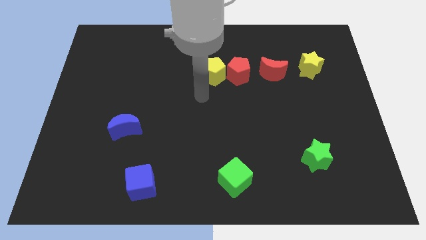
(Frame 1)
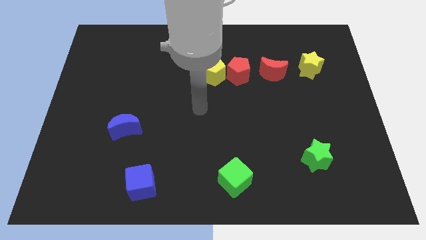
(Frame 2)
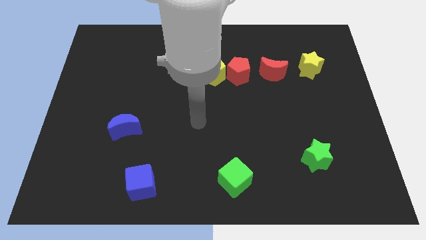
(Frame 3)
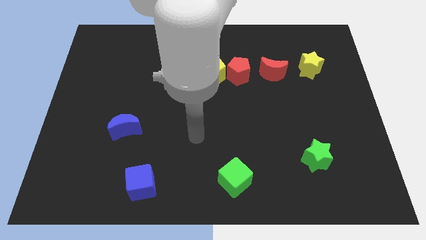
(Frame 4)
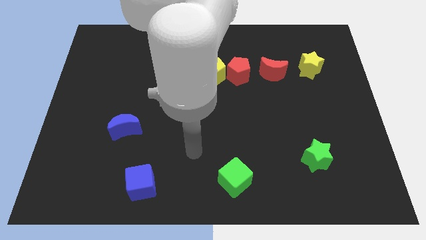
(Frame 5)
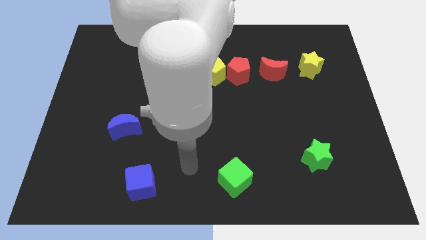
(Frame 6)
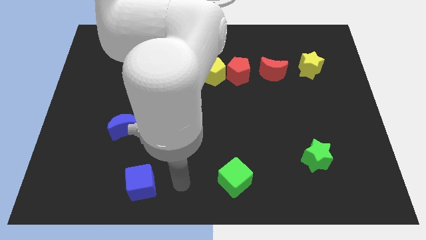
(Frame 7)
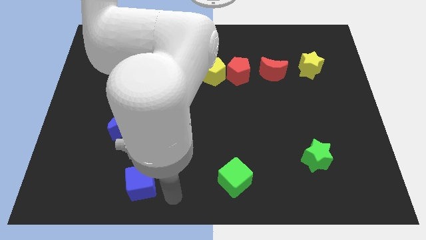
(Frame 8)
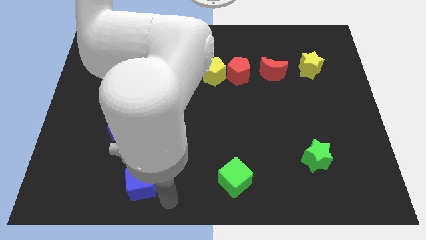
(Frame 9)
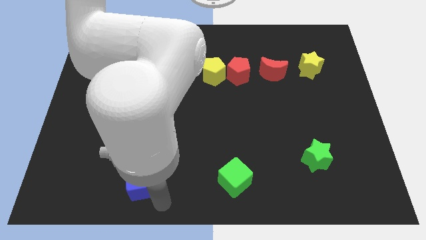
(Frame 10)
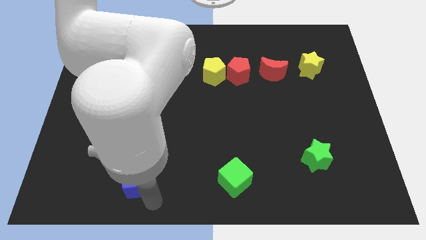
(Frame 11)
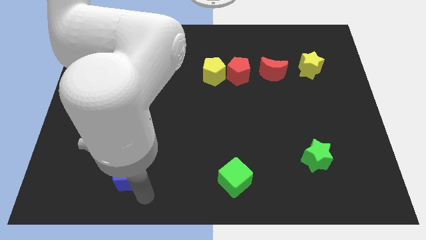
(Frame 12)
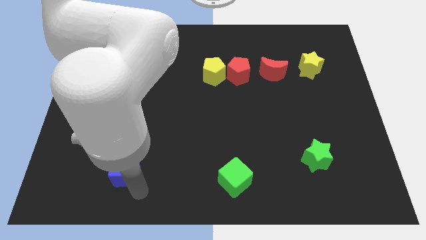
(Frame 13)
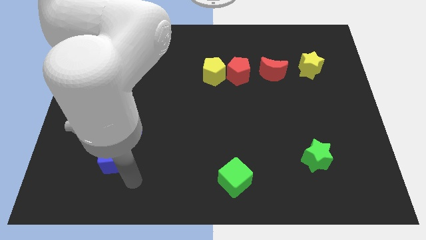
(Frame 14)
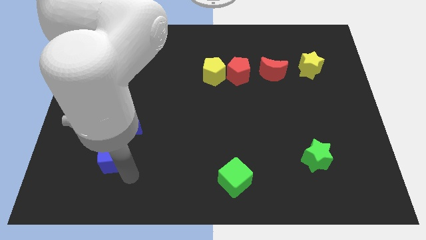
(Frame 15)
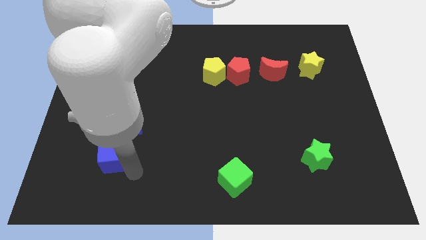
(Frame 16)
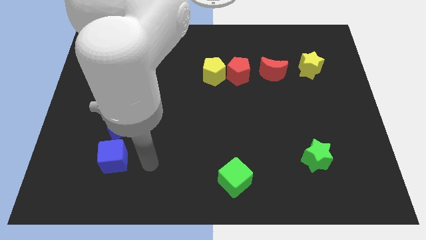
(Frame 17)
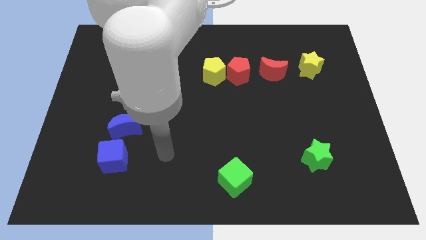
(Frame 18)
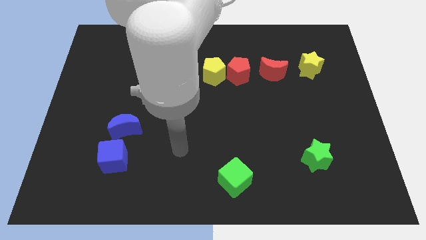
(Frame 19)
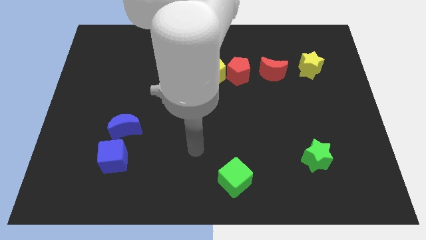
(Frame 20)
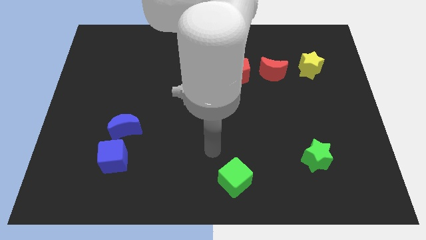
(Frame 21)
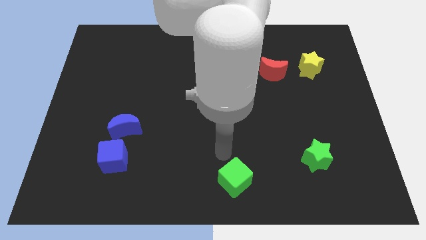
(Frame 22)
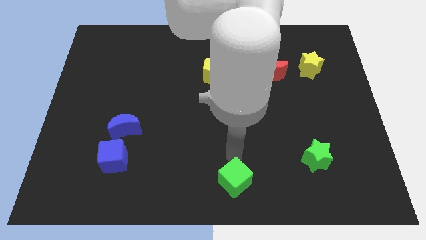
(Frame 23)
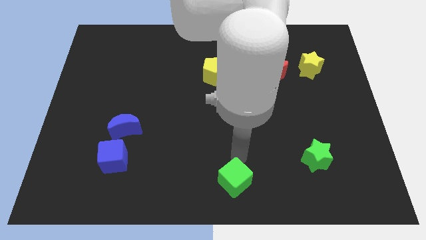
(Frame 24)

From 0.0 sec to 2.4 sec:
move the blue cube to the bottom of the blue crescent

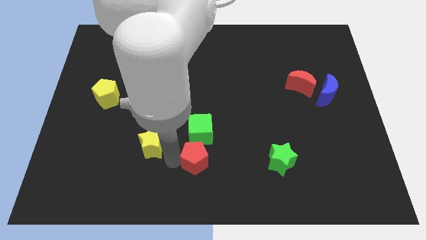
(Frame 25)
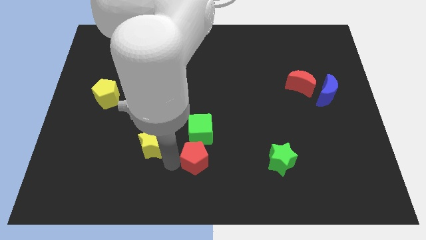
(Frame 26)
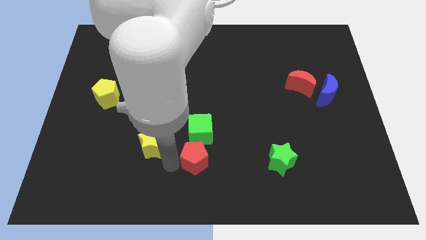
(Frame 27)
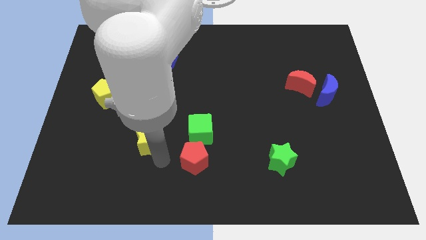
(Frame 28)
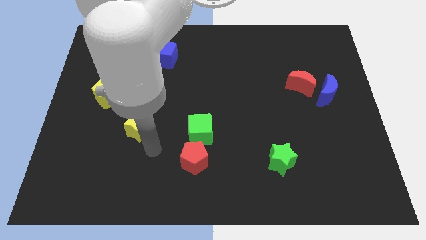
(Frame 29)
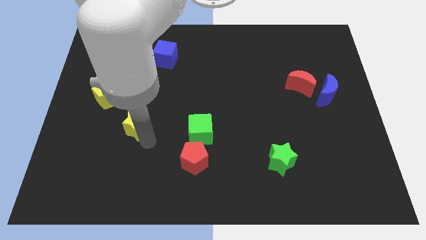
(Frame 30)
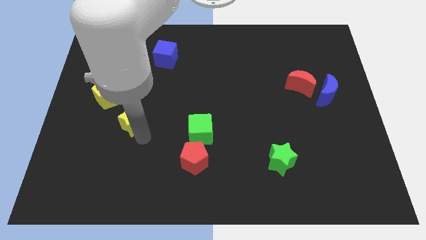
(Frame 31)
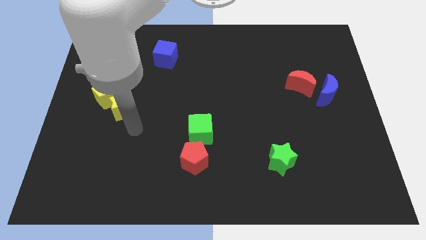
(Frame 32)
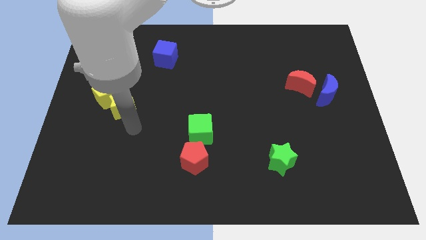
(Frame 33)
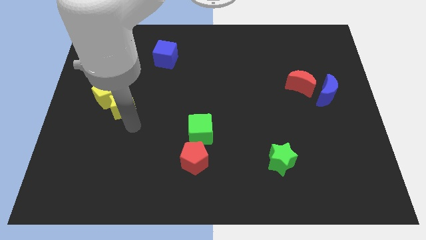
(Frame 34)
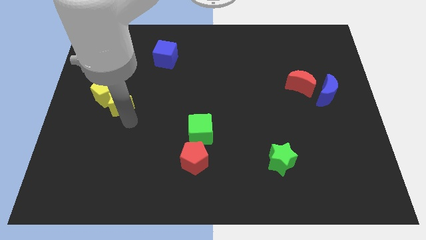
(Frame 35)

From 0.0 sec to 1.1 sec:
drag the yellow star and place it close to the yellow pentagon

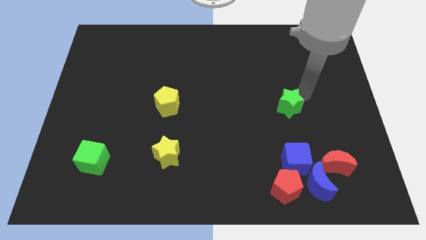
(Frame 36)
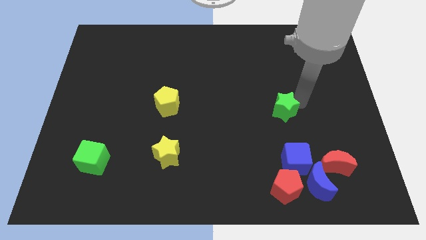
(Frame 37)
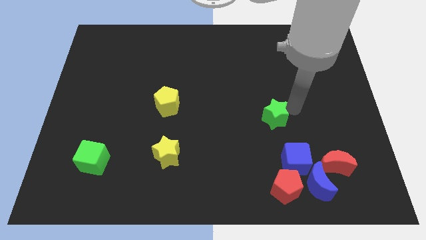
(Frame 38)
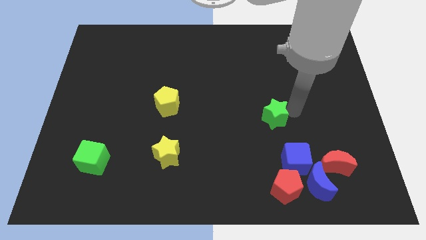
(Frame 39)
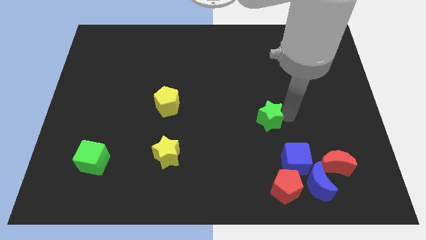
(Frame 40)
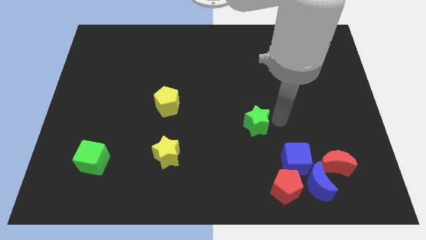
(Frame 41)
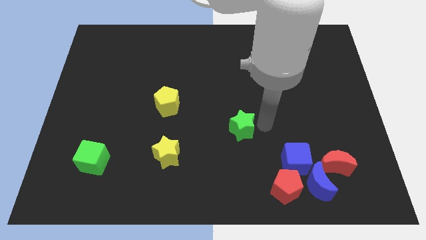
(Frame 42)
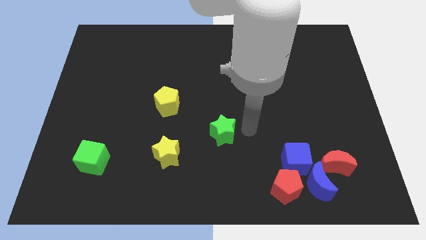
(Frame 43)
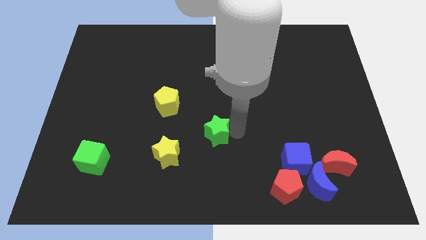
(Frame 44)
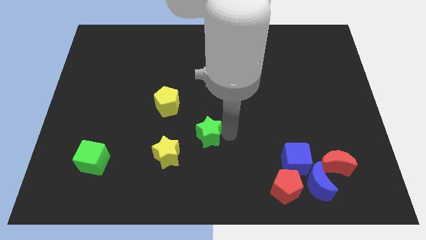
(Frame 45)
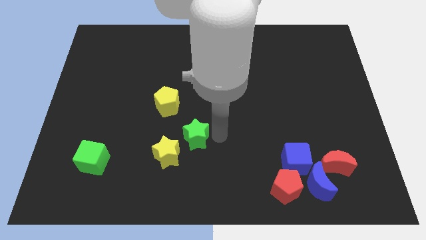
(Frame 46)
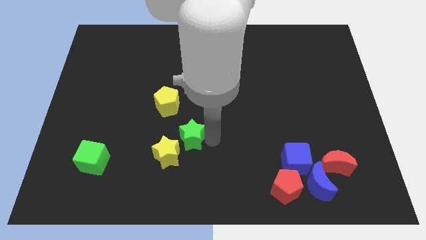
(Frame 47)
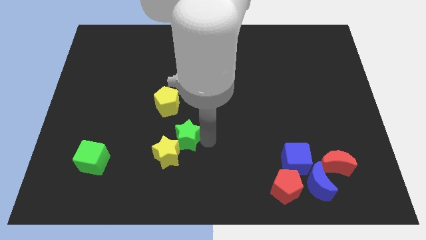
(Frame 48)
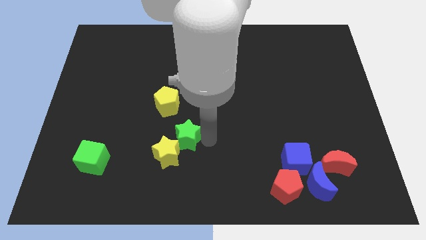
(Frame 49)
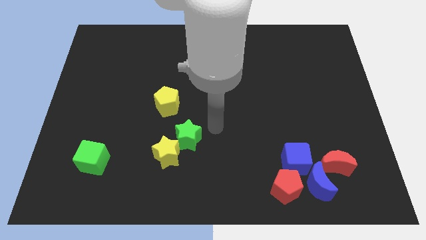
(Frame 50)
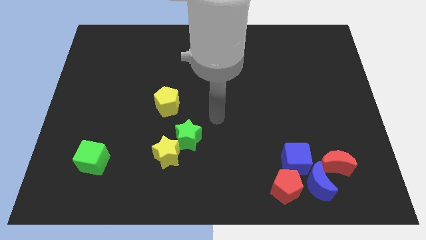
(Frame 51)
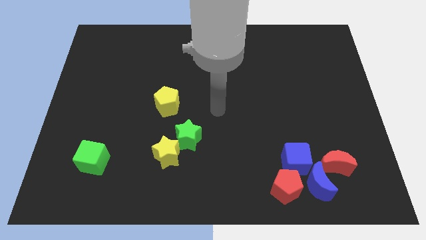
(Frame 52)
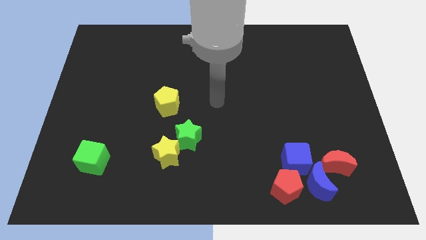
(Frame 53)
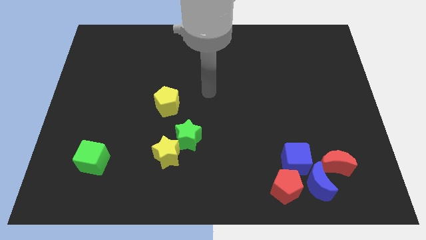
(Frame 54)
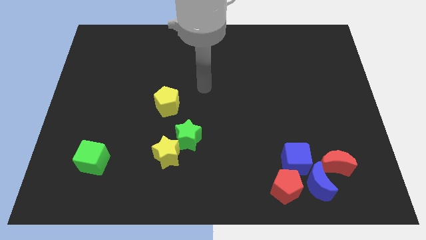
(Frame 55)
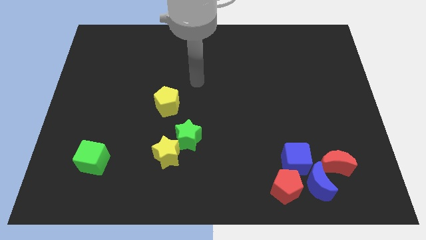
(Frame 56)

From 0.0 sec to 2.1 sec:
push the green star into the yellow star

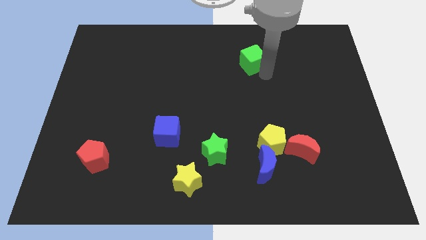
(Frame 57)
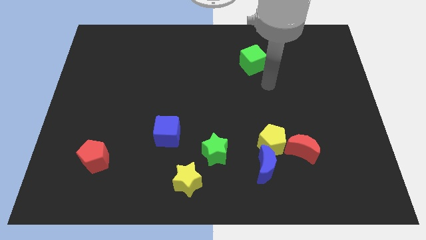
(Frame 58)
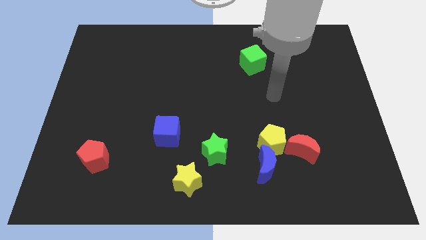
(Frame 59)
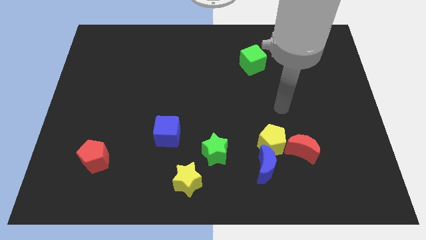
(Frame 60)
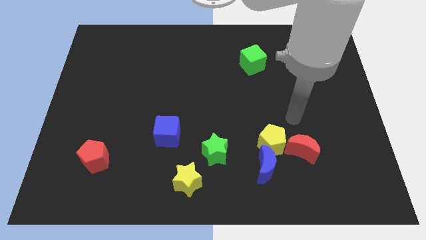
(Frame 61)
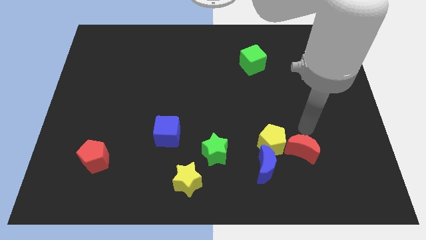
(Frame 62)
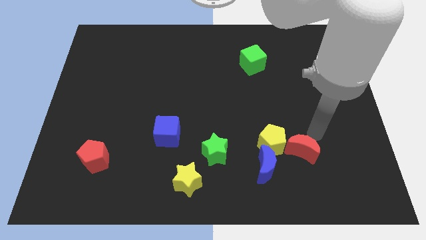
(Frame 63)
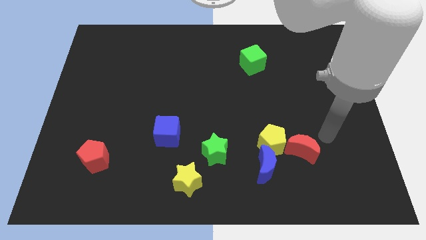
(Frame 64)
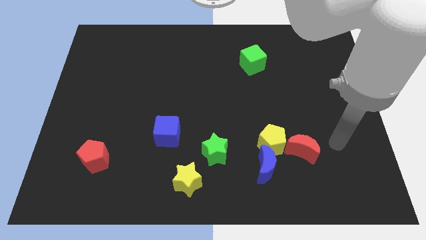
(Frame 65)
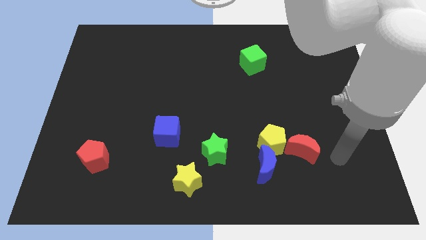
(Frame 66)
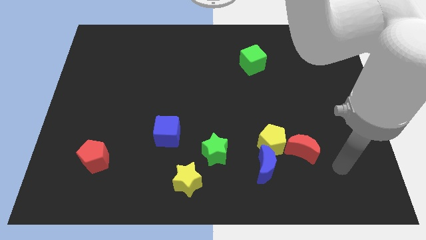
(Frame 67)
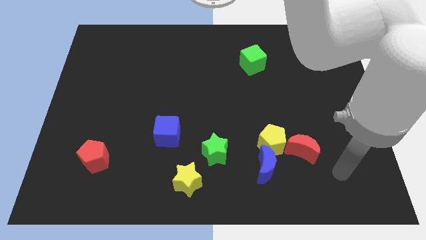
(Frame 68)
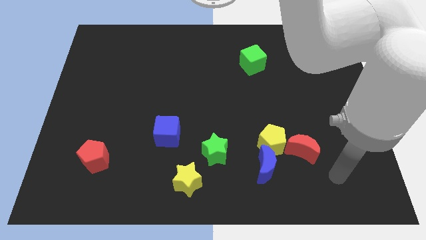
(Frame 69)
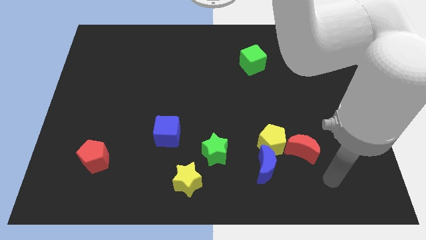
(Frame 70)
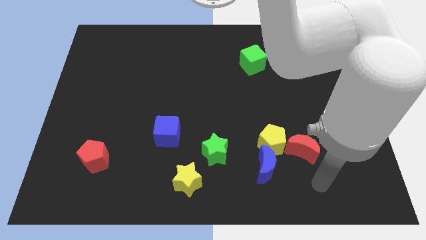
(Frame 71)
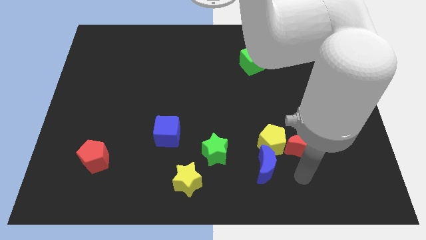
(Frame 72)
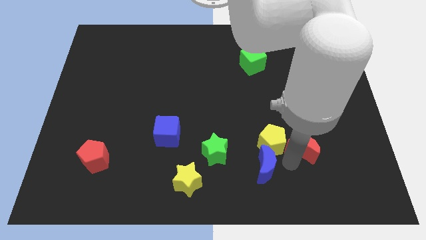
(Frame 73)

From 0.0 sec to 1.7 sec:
put your hand vertically below the red crescent

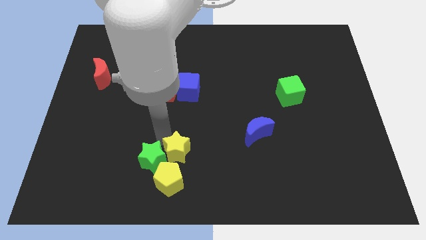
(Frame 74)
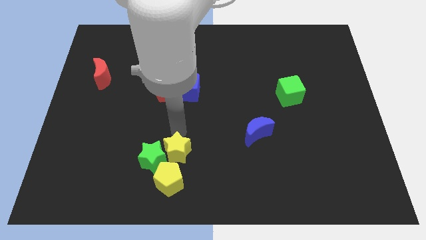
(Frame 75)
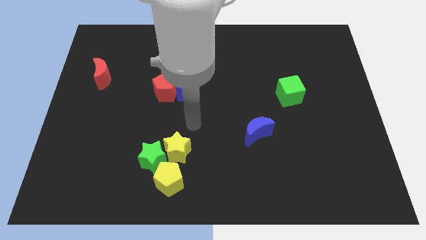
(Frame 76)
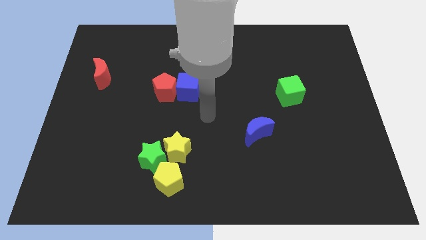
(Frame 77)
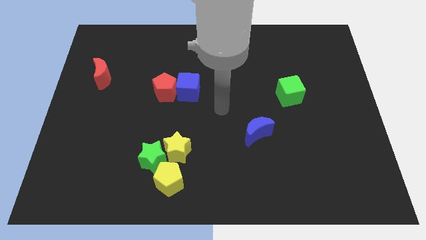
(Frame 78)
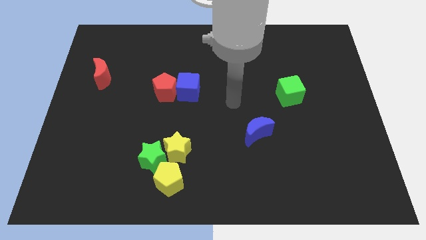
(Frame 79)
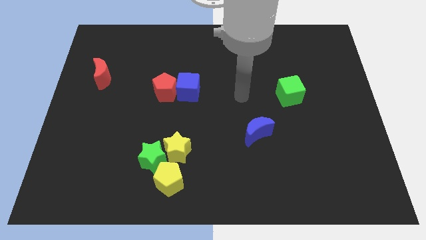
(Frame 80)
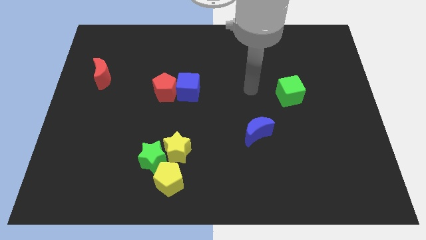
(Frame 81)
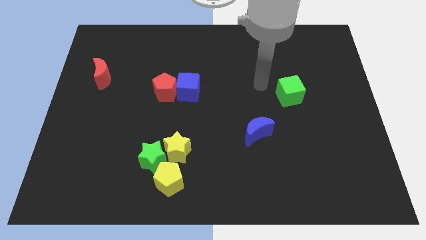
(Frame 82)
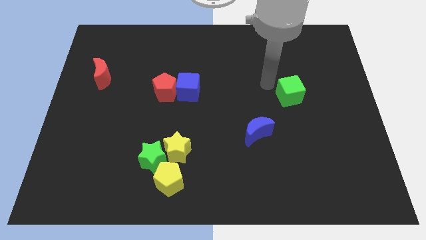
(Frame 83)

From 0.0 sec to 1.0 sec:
move the arm diagonally to the green cube

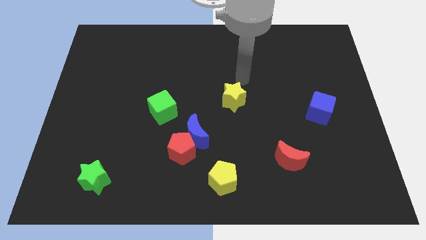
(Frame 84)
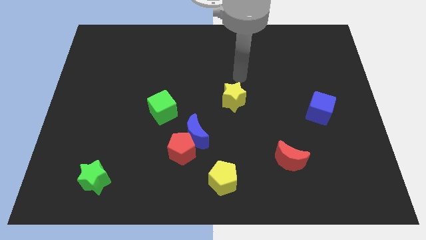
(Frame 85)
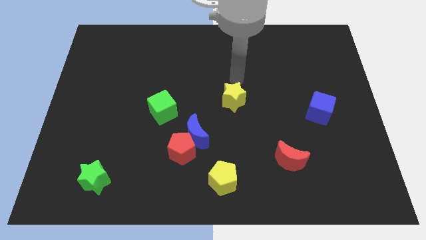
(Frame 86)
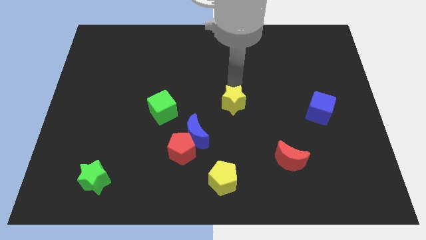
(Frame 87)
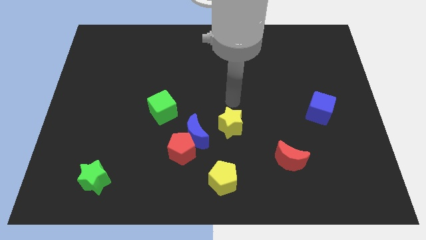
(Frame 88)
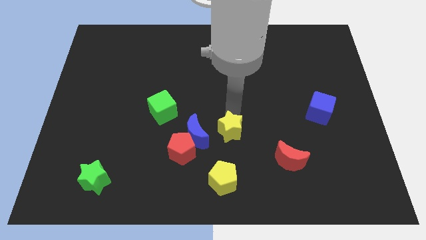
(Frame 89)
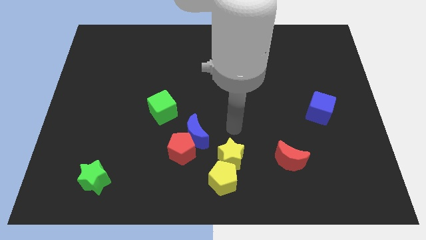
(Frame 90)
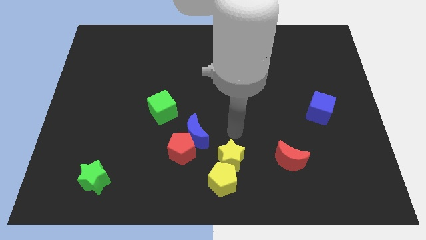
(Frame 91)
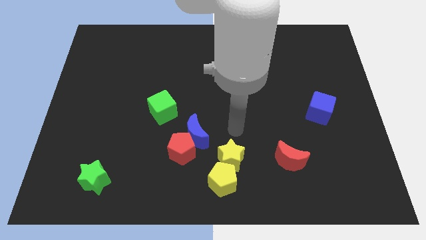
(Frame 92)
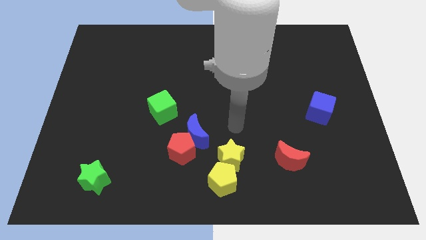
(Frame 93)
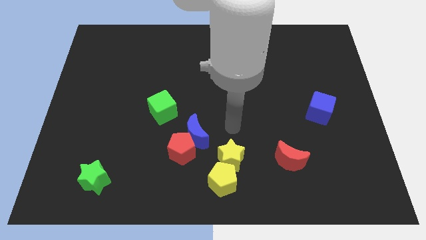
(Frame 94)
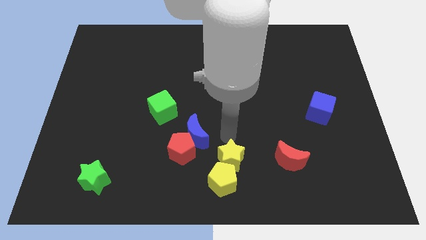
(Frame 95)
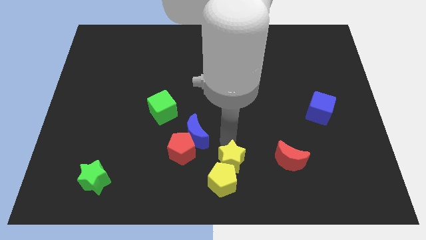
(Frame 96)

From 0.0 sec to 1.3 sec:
push the yellow star into the yellow pentagon
